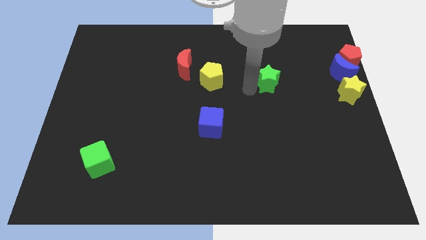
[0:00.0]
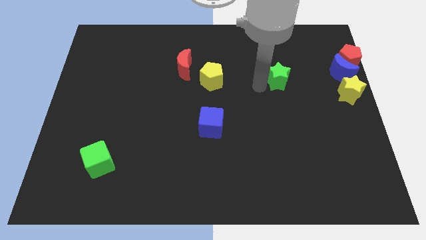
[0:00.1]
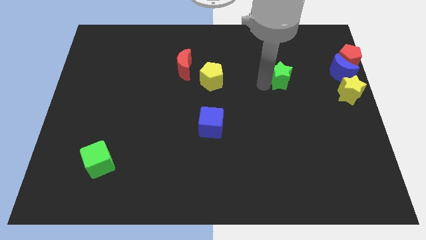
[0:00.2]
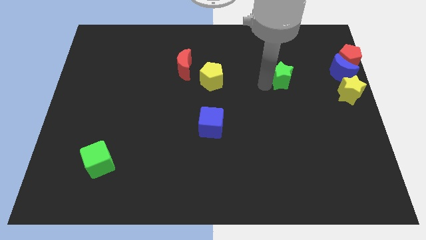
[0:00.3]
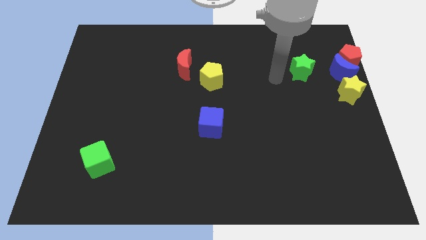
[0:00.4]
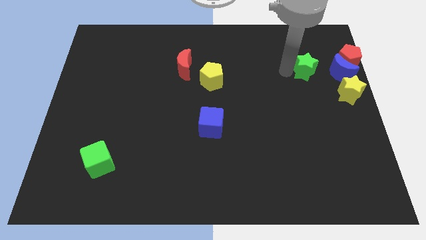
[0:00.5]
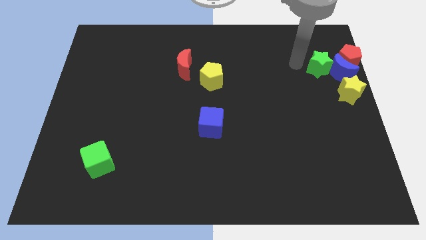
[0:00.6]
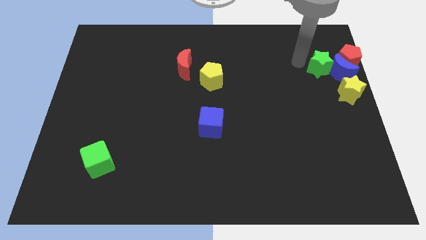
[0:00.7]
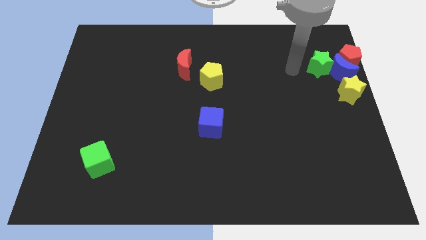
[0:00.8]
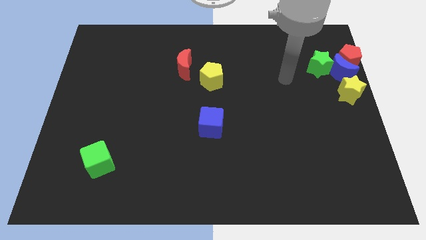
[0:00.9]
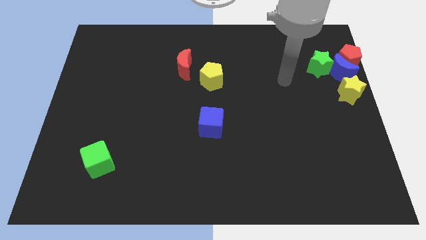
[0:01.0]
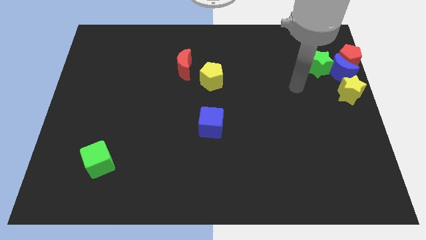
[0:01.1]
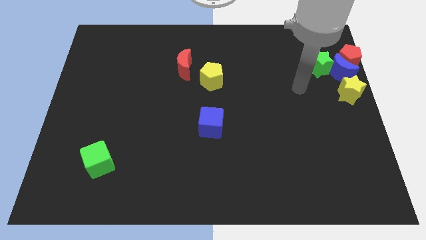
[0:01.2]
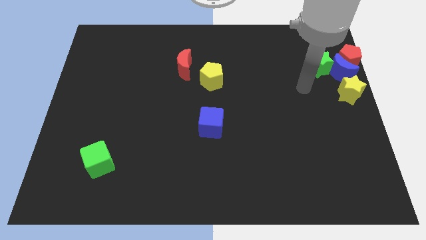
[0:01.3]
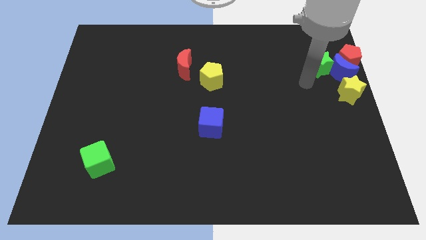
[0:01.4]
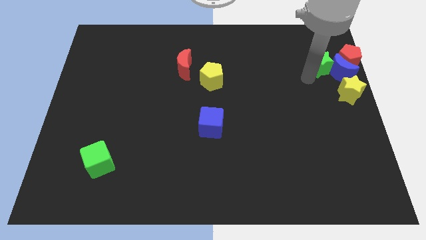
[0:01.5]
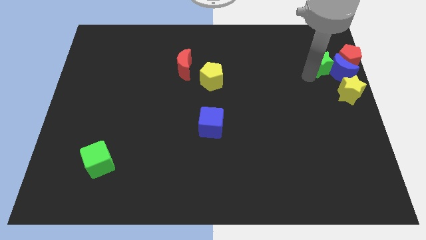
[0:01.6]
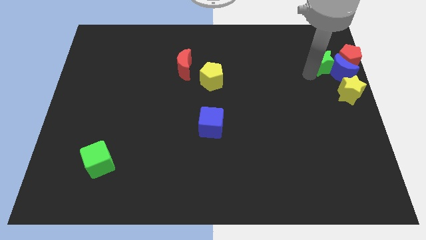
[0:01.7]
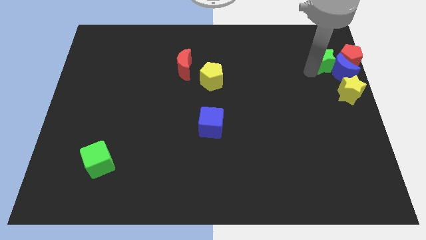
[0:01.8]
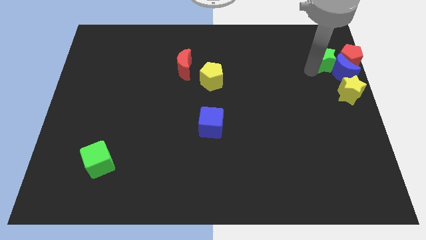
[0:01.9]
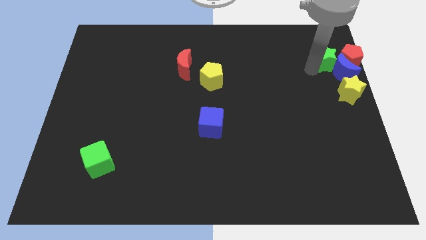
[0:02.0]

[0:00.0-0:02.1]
move the green star near to the blue moon and red pentagon

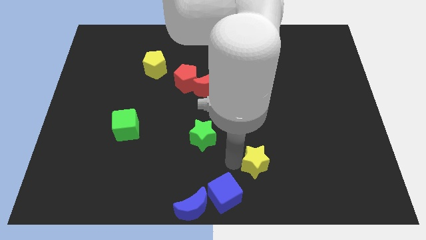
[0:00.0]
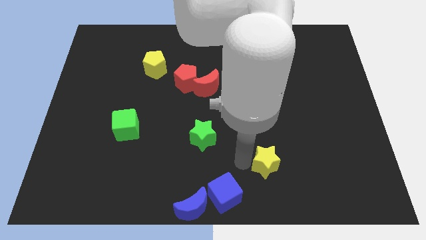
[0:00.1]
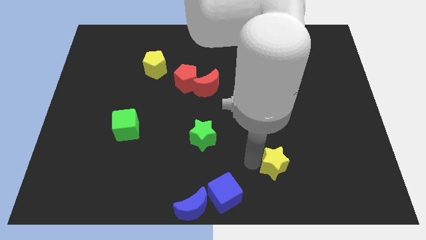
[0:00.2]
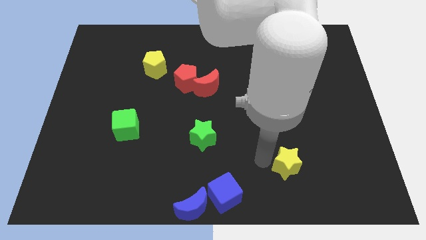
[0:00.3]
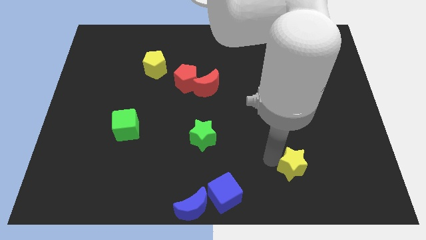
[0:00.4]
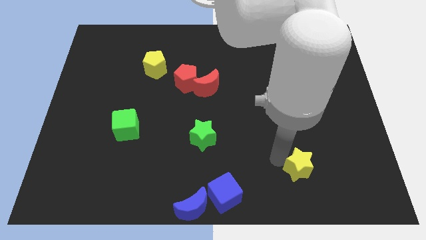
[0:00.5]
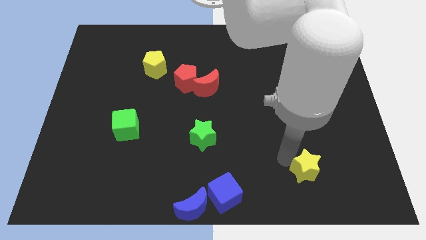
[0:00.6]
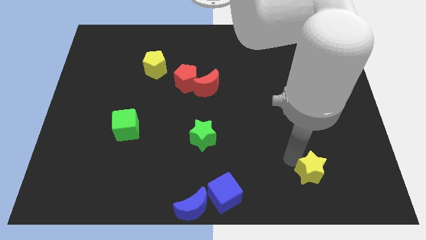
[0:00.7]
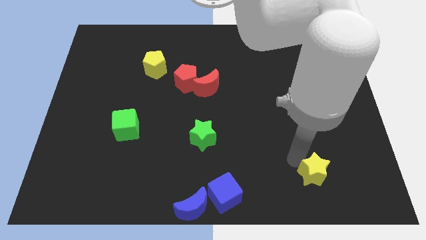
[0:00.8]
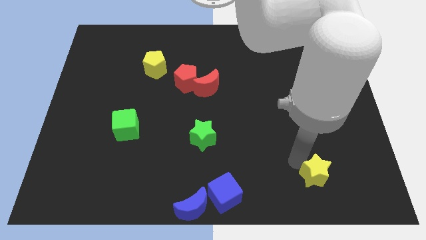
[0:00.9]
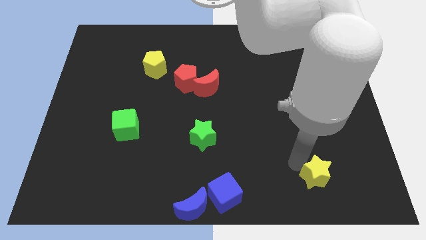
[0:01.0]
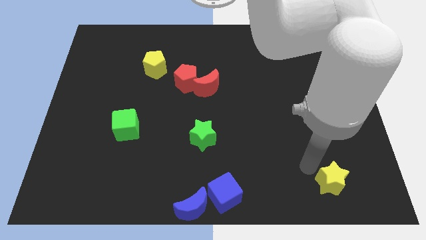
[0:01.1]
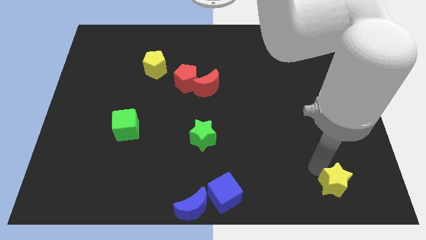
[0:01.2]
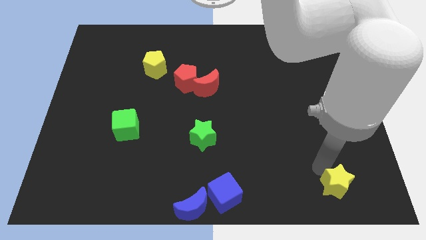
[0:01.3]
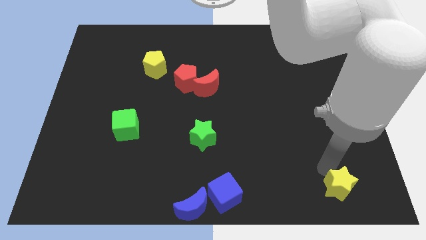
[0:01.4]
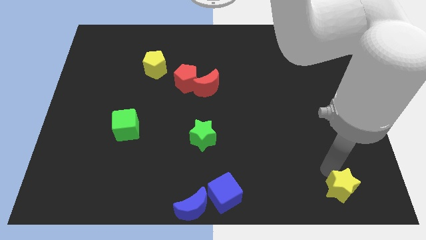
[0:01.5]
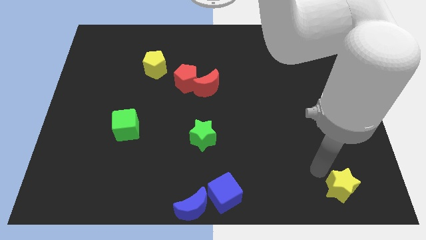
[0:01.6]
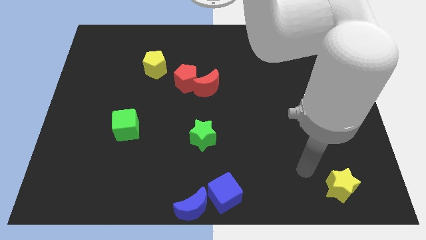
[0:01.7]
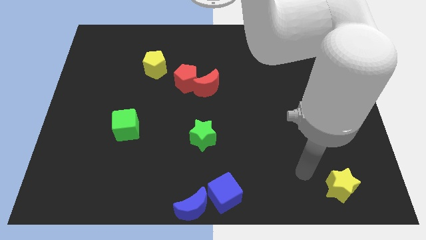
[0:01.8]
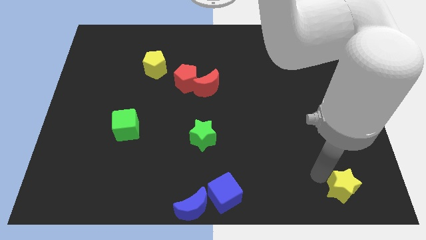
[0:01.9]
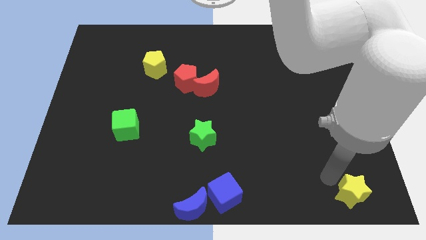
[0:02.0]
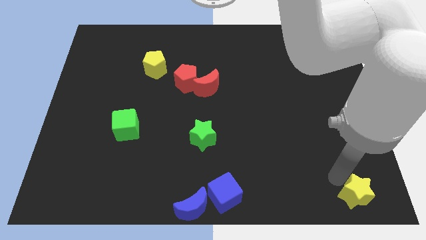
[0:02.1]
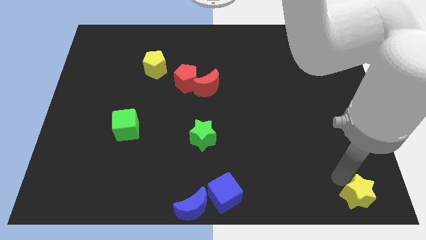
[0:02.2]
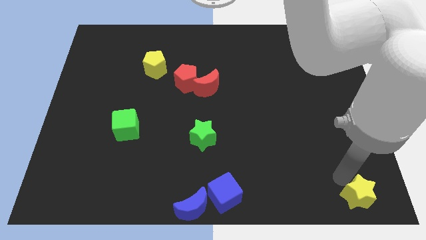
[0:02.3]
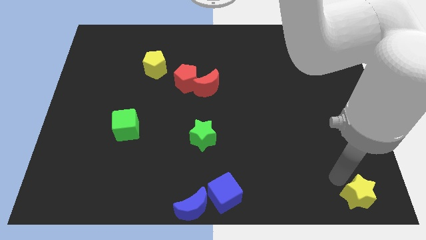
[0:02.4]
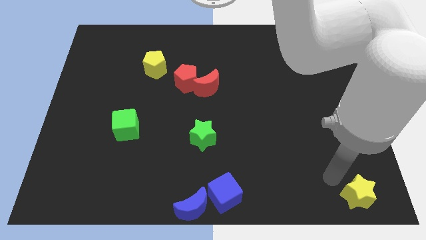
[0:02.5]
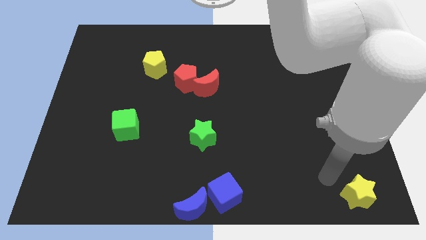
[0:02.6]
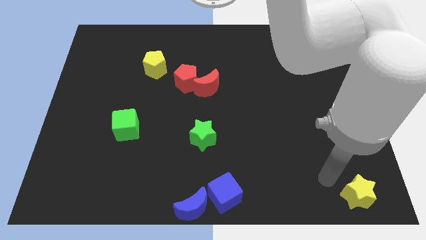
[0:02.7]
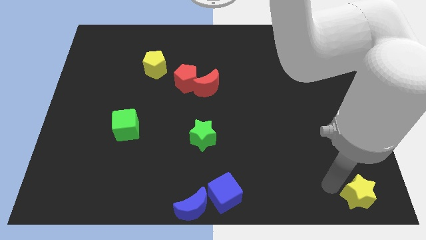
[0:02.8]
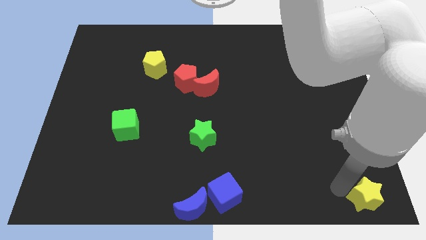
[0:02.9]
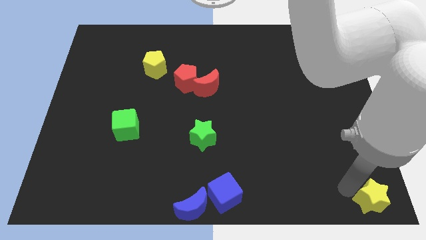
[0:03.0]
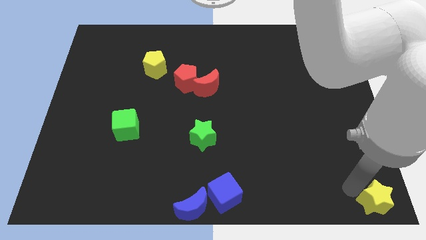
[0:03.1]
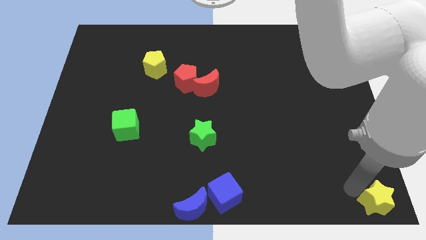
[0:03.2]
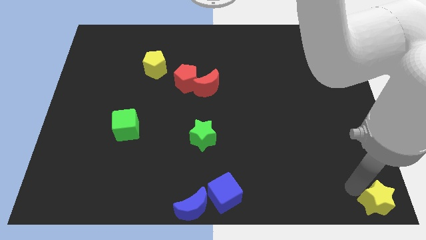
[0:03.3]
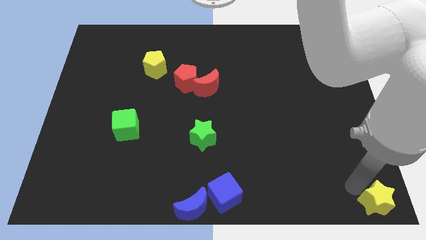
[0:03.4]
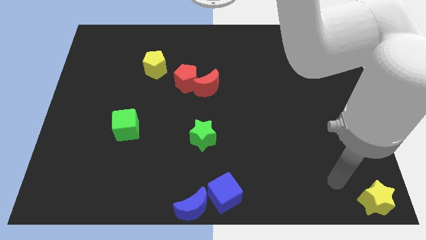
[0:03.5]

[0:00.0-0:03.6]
place yellow star to bottom right corner

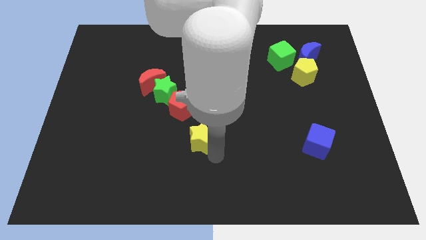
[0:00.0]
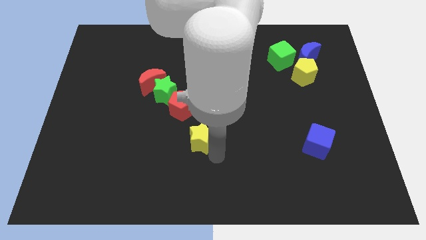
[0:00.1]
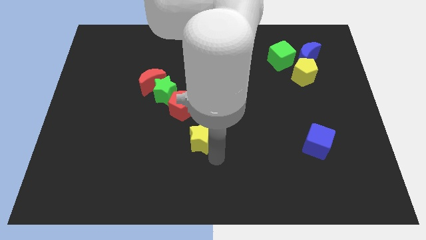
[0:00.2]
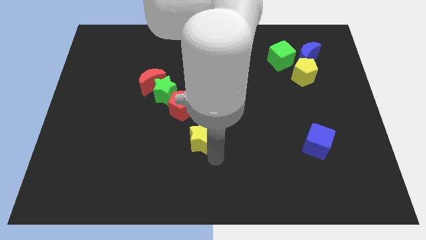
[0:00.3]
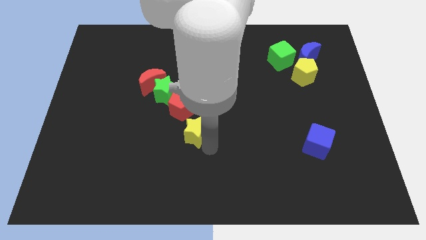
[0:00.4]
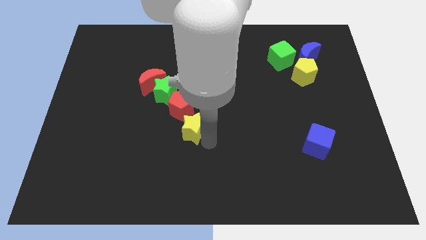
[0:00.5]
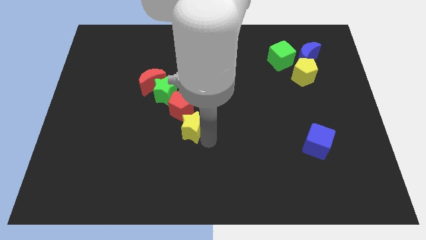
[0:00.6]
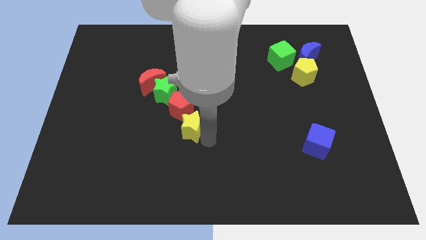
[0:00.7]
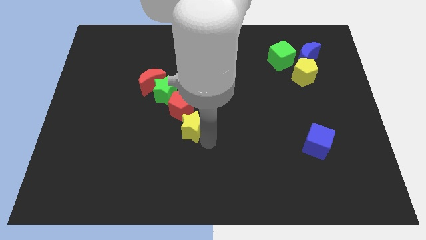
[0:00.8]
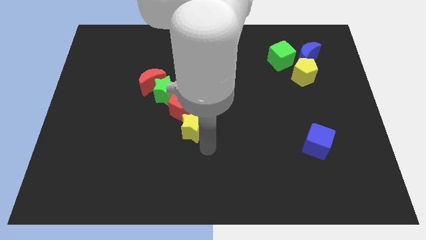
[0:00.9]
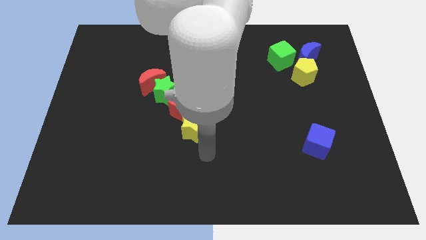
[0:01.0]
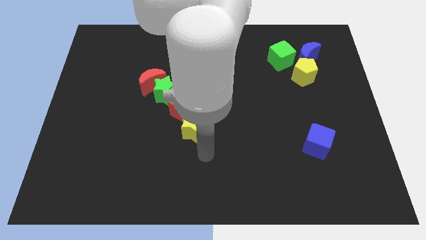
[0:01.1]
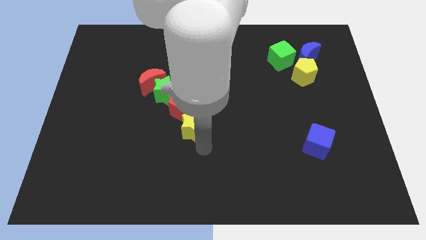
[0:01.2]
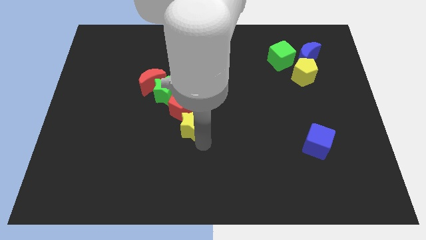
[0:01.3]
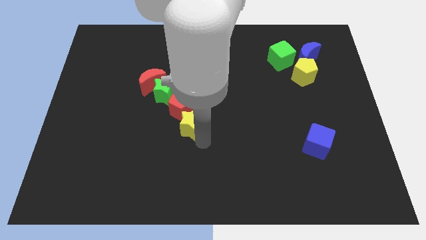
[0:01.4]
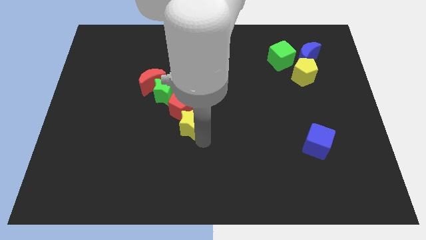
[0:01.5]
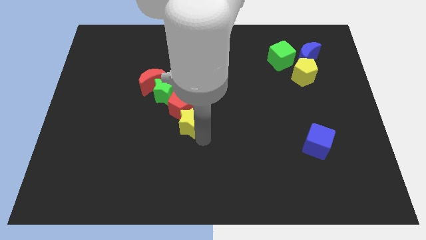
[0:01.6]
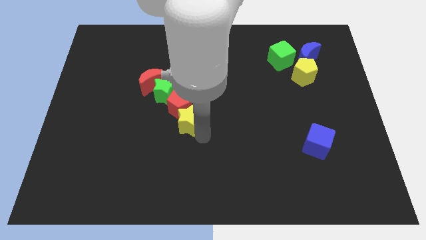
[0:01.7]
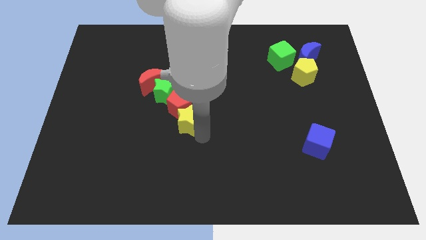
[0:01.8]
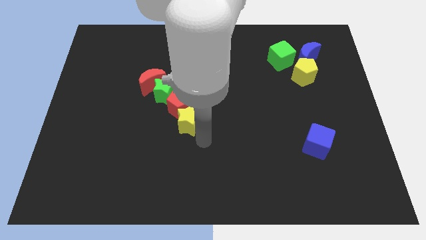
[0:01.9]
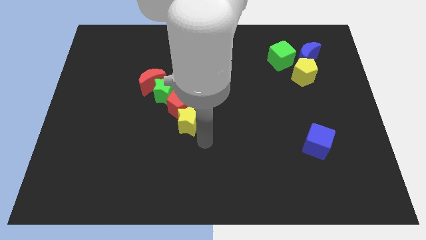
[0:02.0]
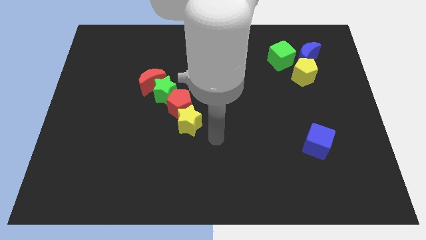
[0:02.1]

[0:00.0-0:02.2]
push the yellow star into the red pentagon

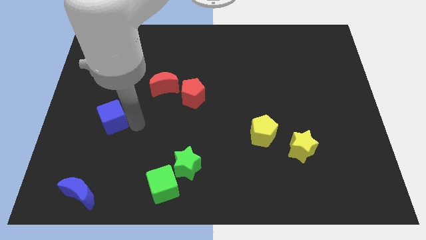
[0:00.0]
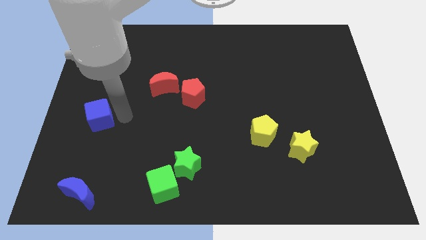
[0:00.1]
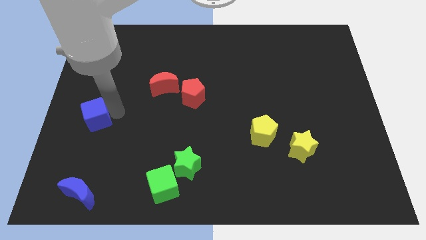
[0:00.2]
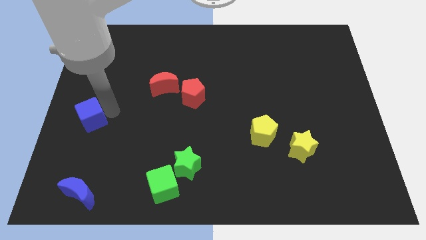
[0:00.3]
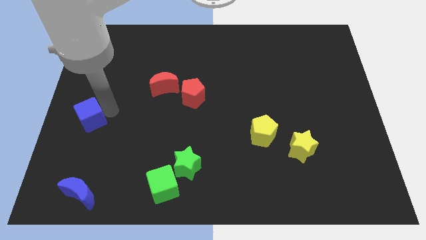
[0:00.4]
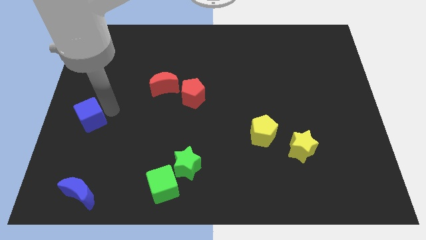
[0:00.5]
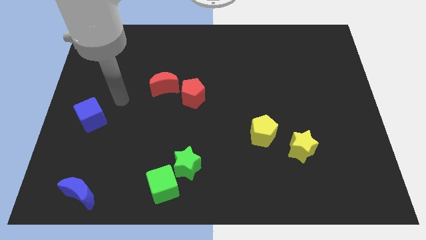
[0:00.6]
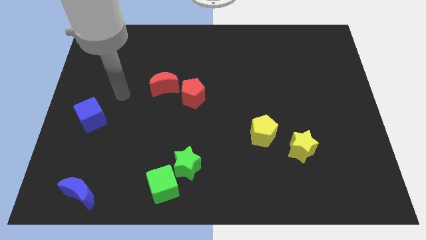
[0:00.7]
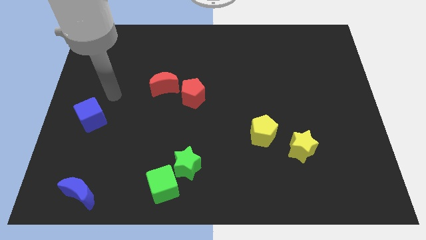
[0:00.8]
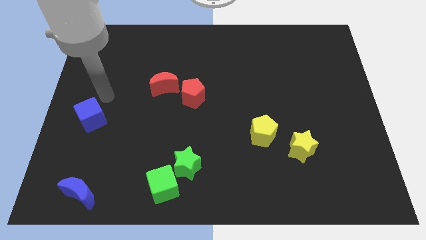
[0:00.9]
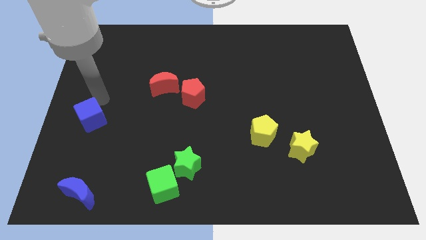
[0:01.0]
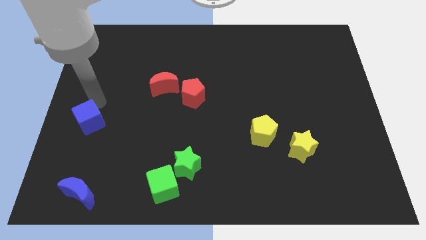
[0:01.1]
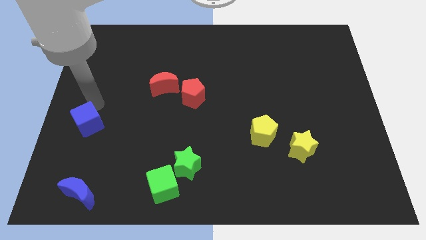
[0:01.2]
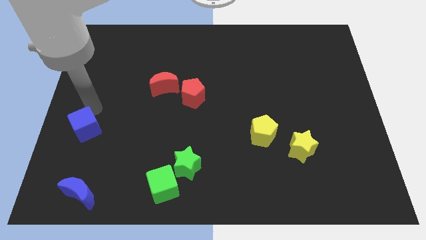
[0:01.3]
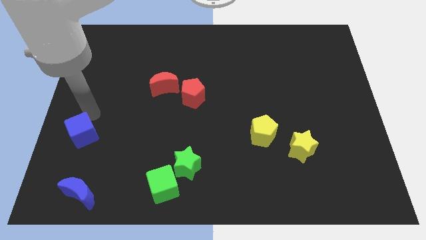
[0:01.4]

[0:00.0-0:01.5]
slide the blue cube towards the blue moon
